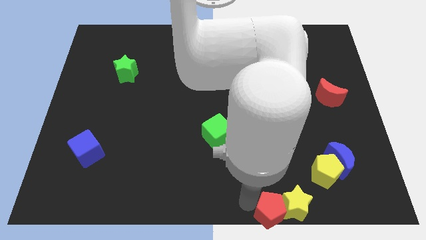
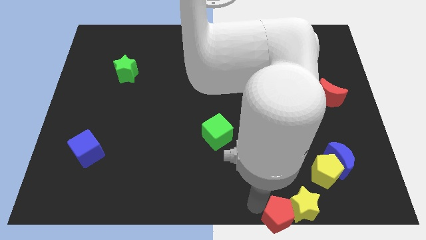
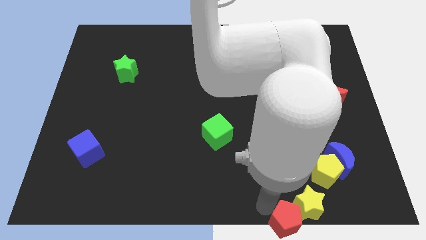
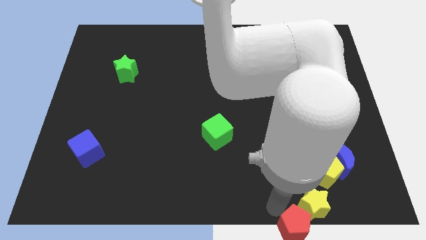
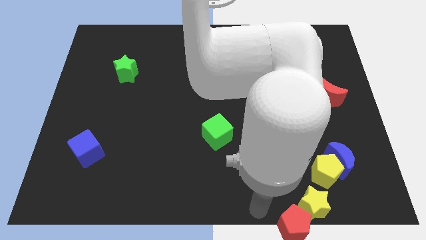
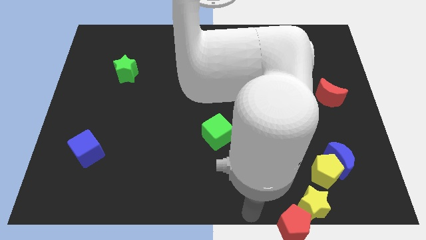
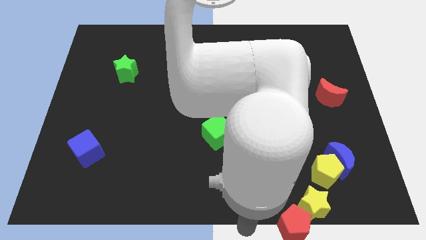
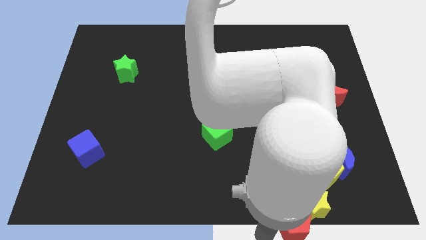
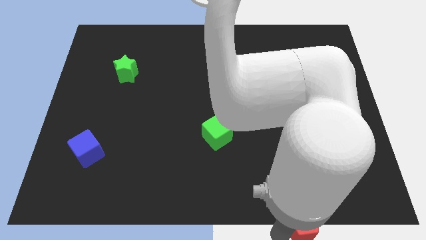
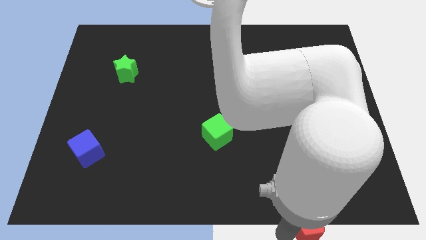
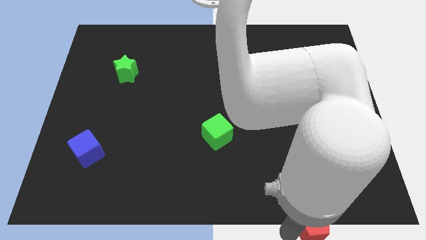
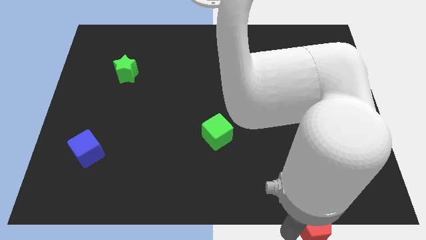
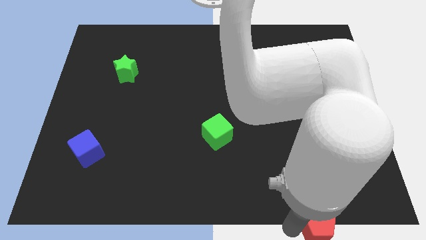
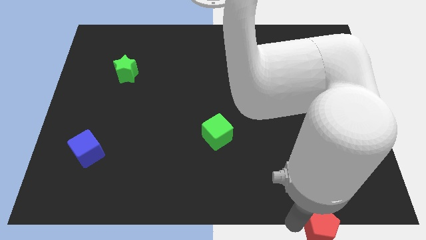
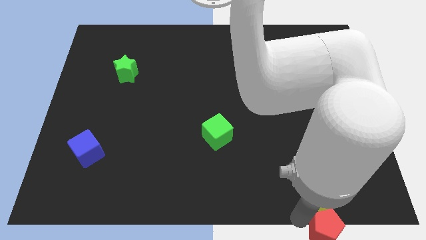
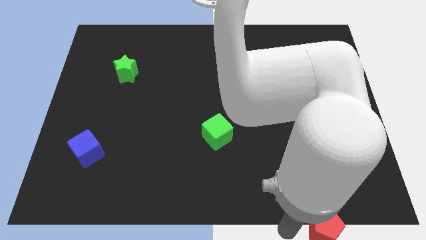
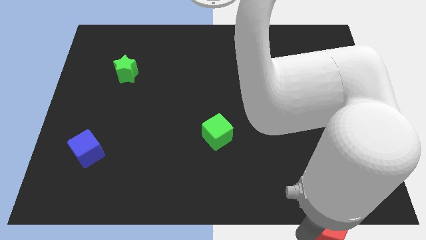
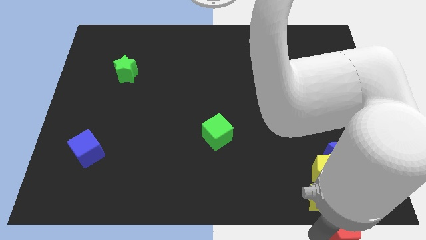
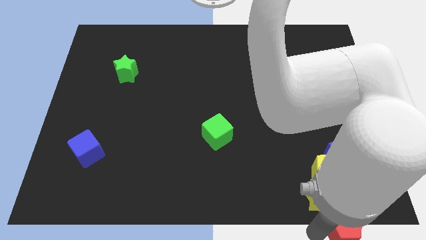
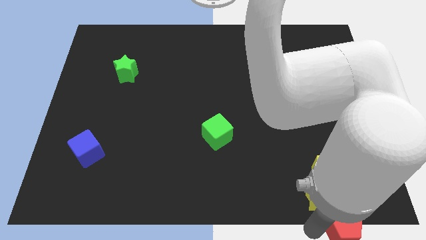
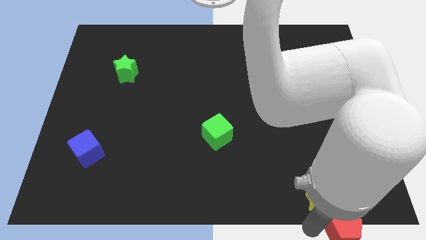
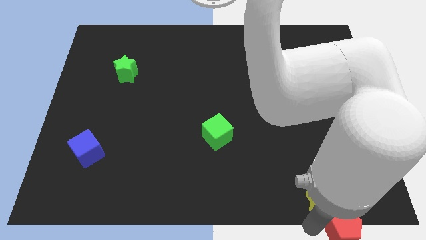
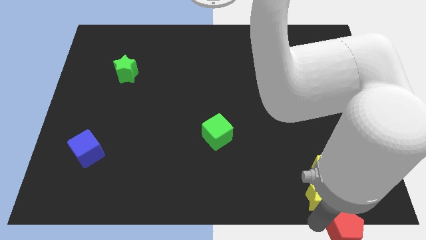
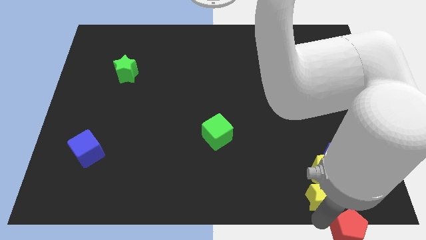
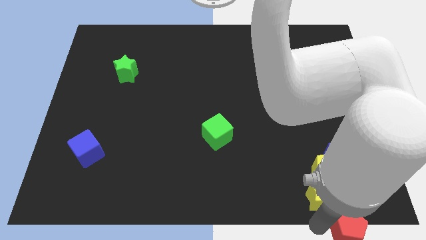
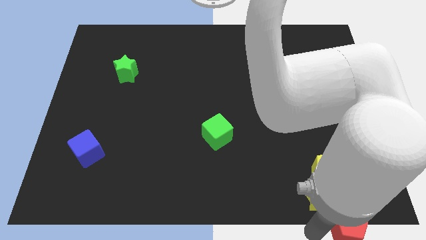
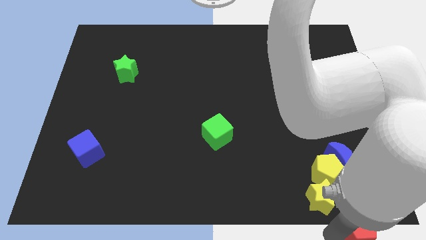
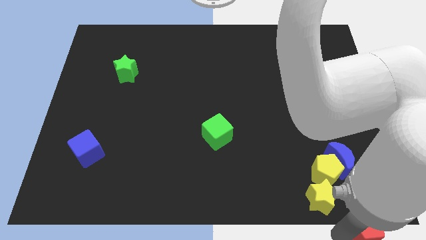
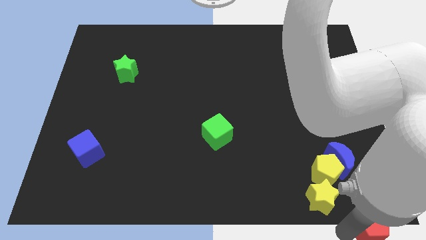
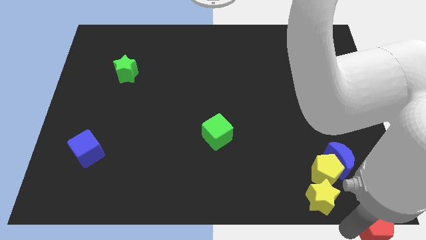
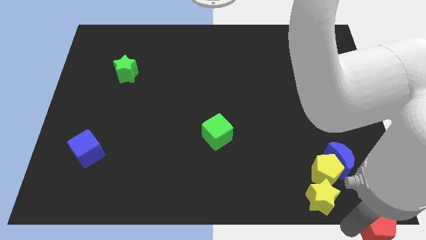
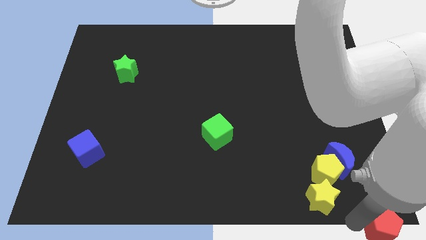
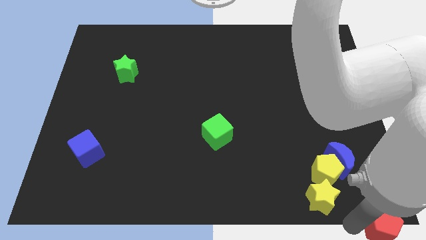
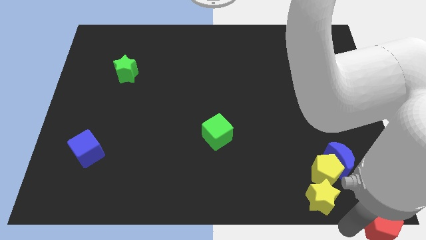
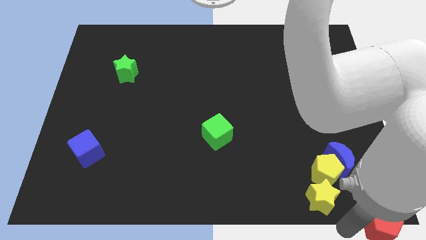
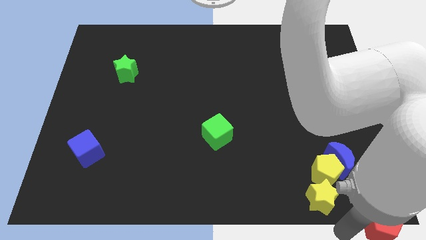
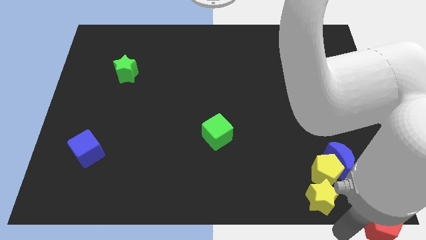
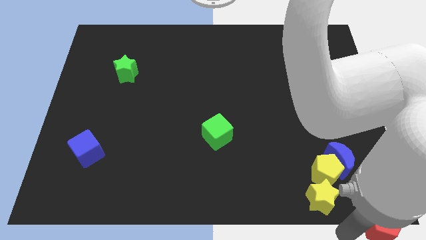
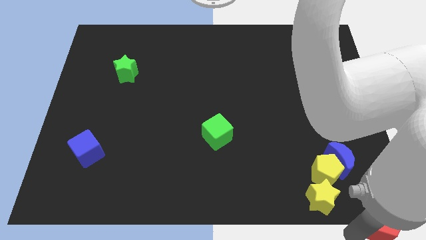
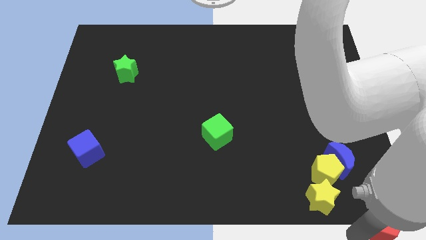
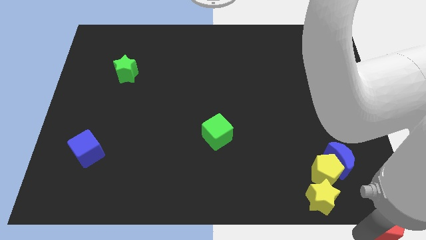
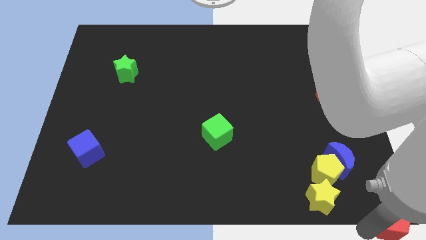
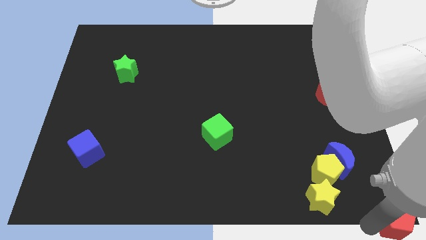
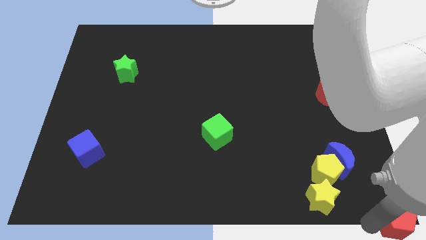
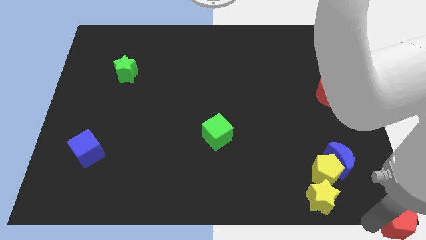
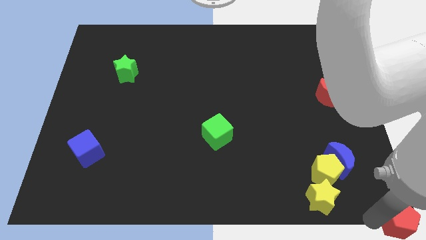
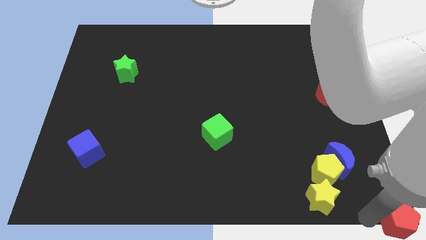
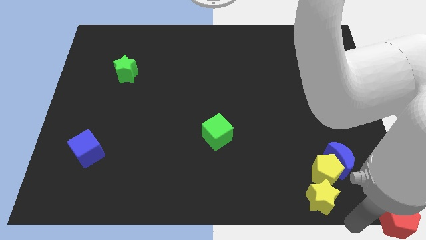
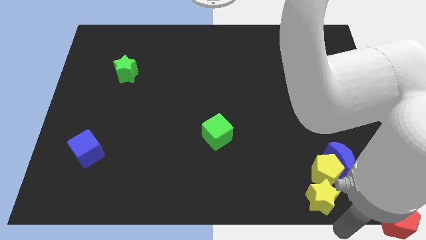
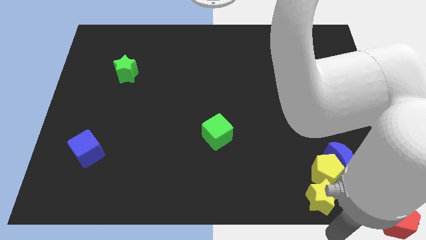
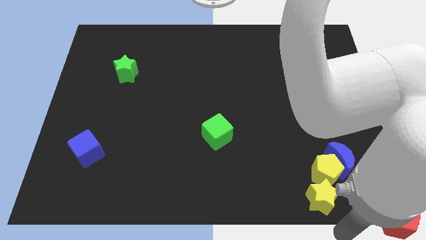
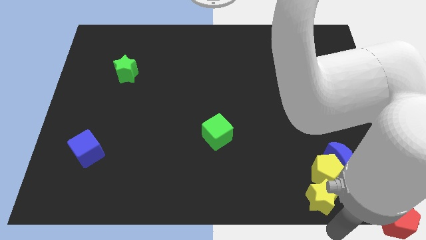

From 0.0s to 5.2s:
move the red pentagon to the bottom right corner

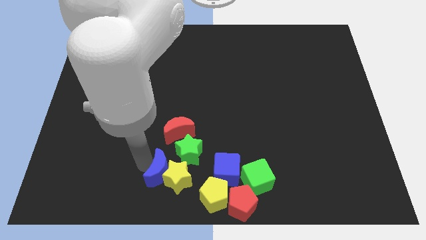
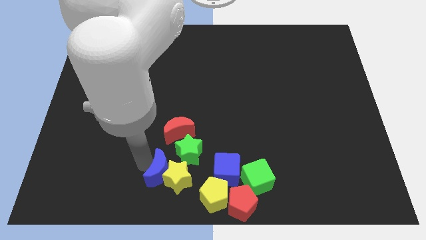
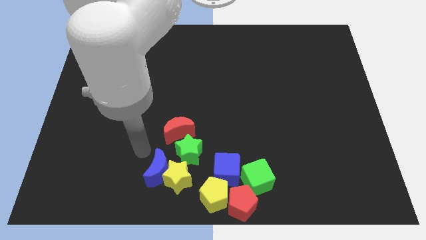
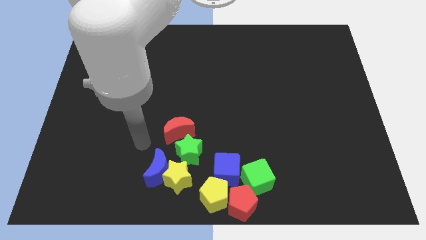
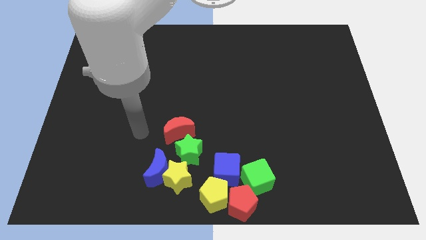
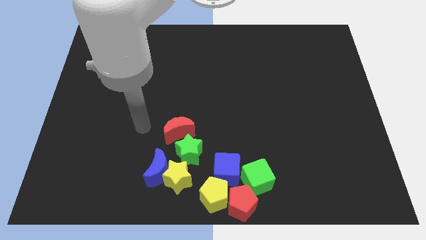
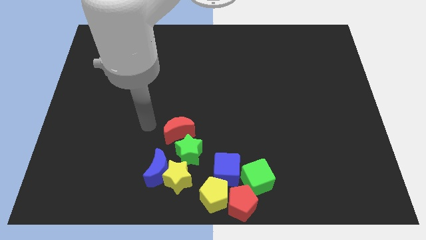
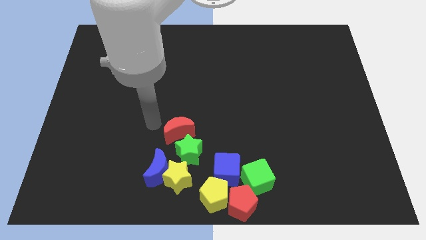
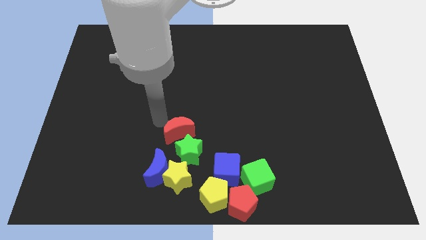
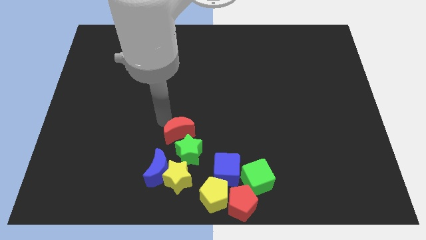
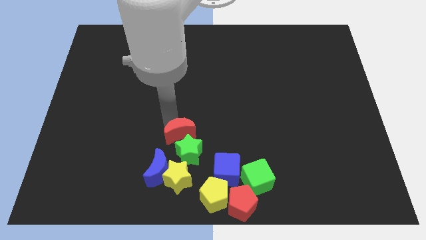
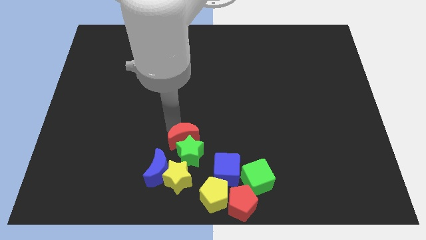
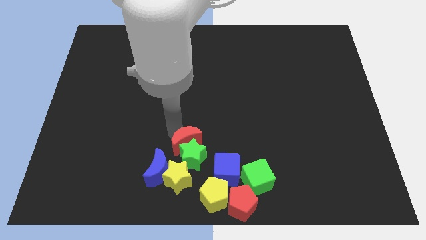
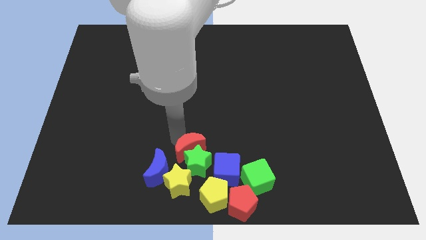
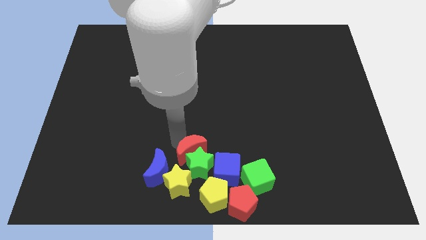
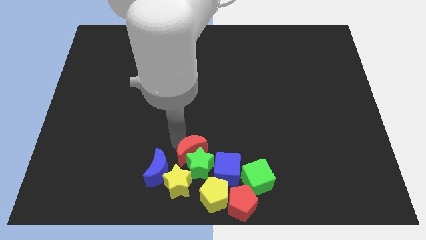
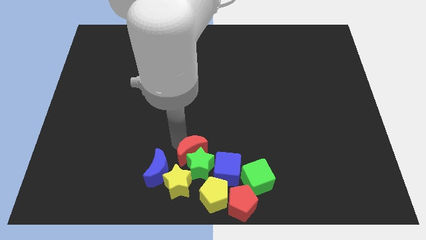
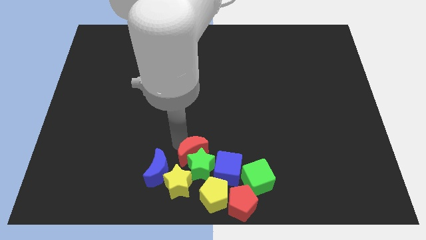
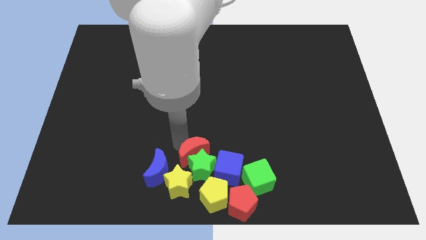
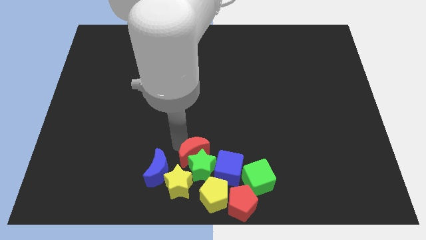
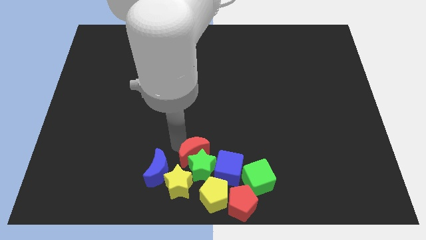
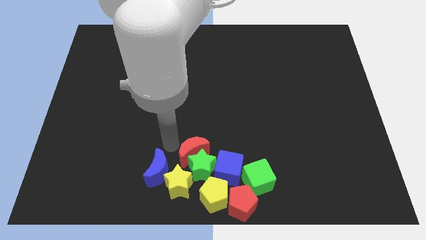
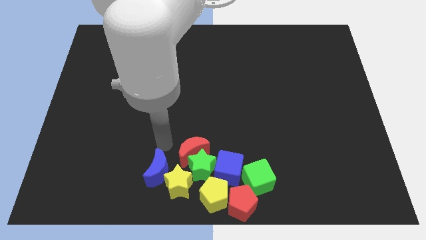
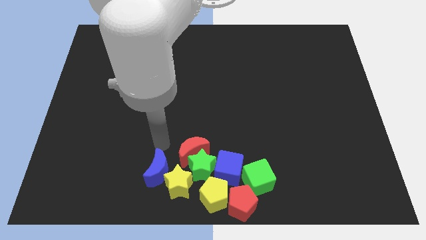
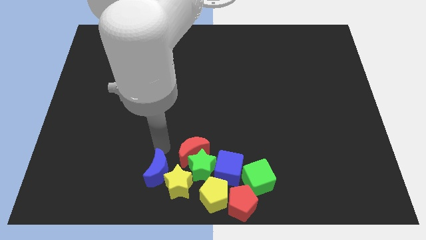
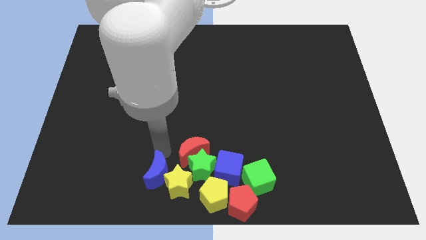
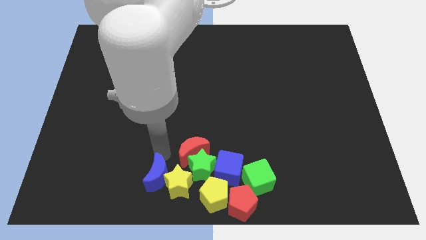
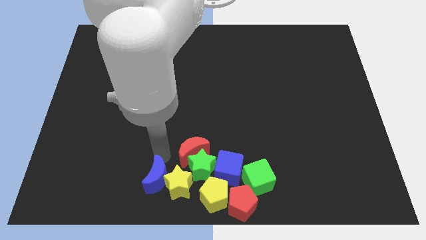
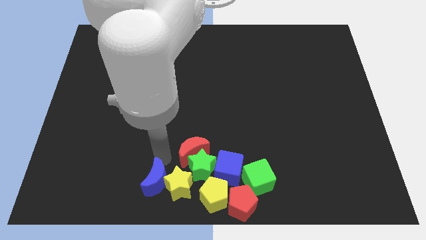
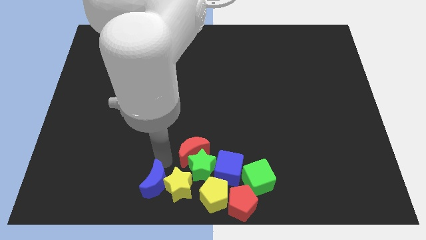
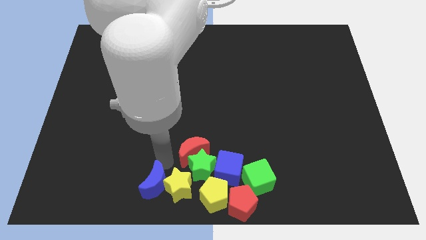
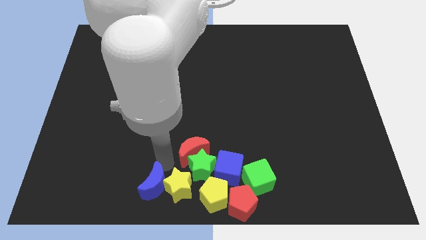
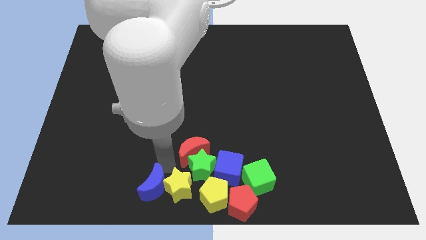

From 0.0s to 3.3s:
push the red crescent into the green star

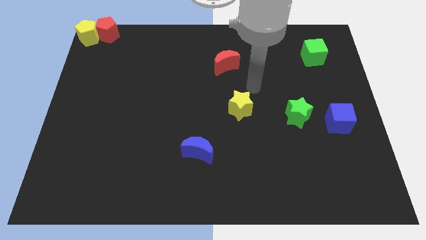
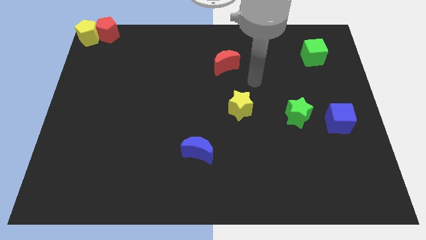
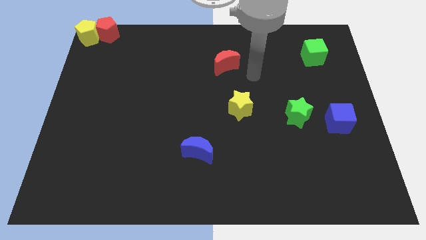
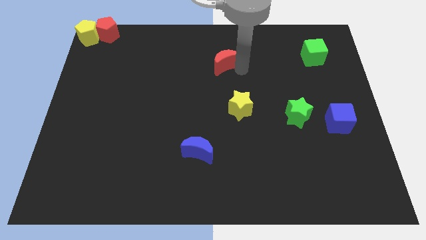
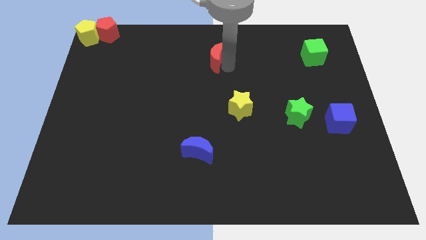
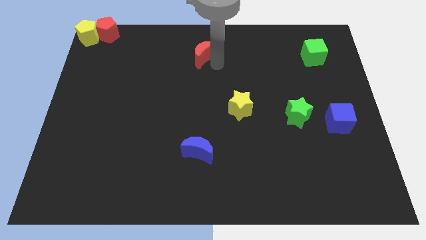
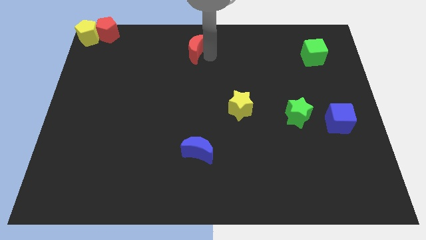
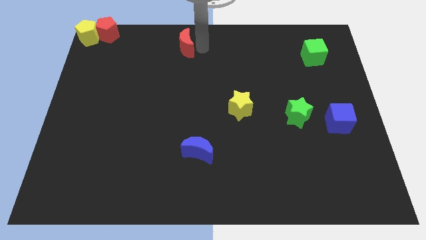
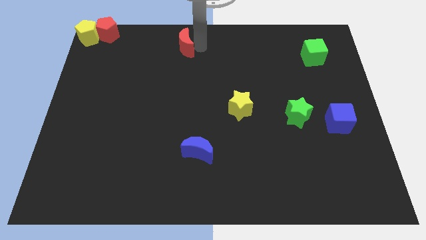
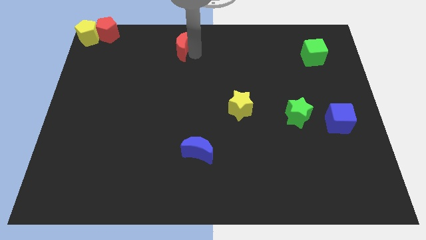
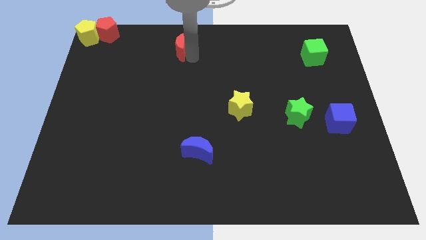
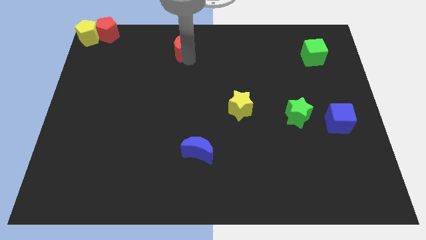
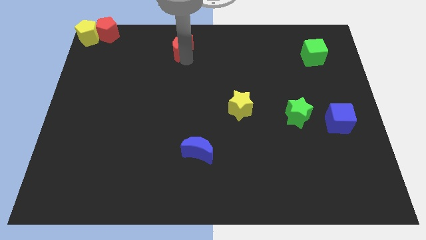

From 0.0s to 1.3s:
push the red moon to the top center
